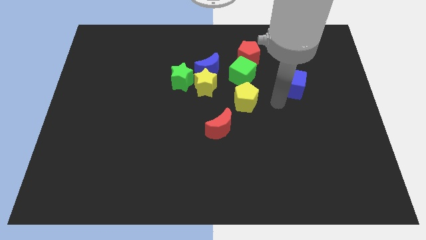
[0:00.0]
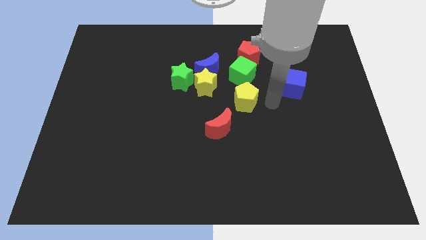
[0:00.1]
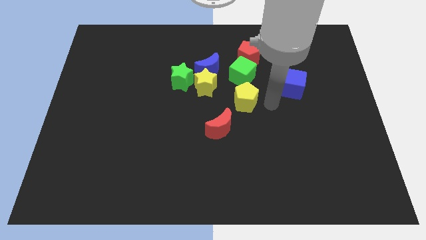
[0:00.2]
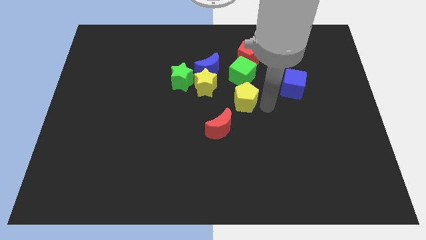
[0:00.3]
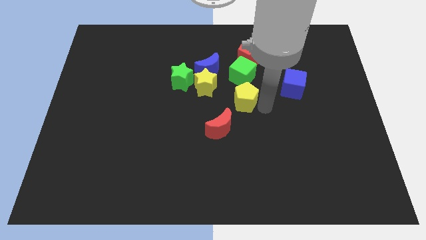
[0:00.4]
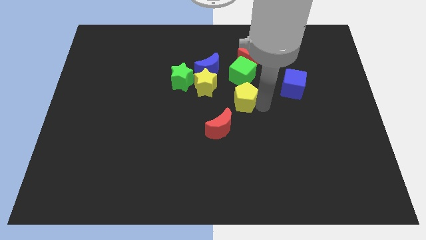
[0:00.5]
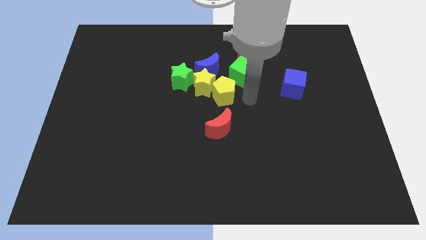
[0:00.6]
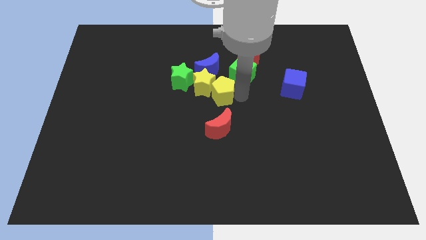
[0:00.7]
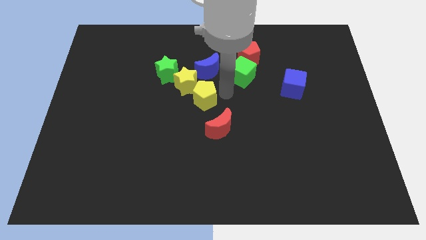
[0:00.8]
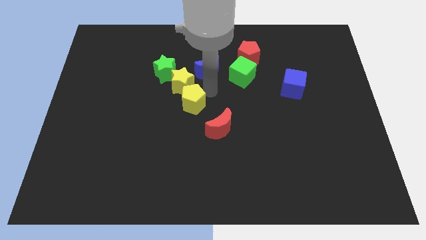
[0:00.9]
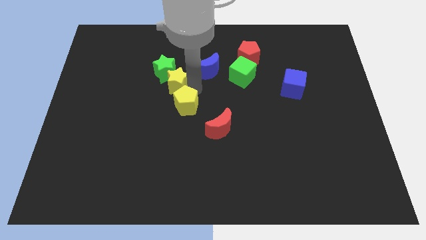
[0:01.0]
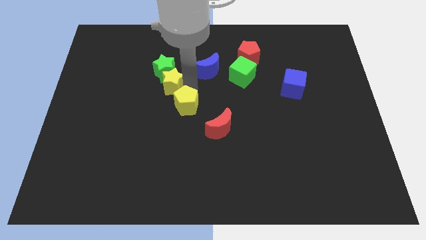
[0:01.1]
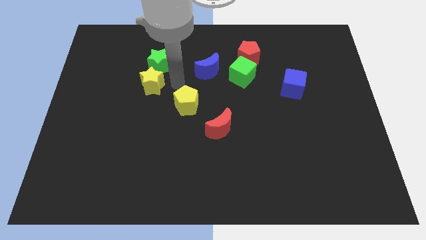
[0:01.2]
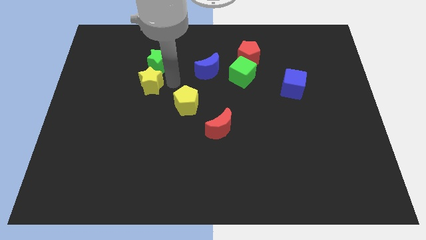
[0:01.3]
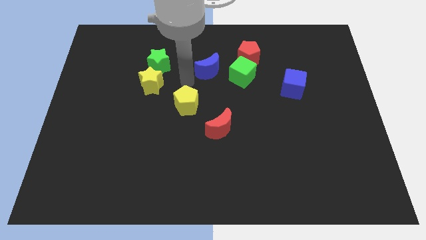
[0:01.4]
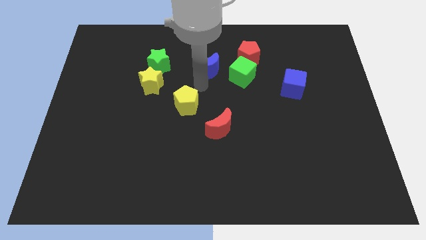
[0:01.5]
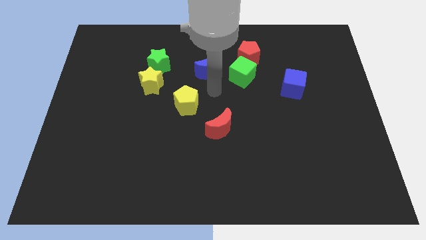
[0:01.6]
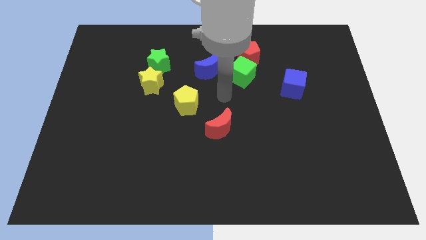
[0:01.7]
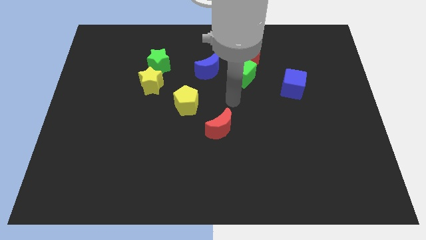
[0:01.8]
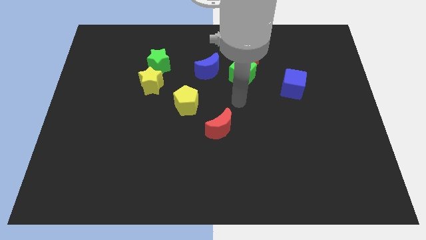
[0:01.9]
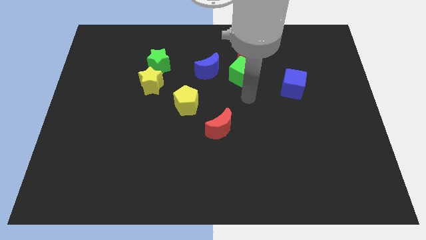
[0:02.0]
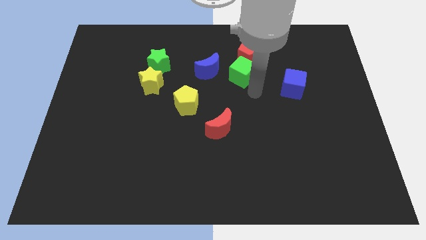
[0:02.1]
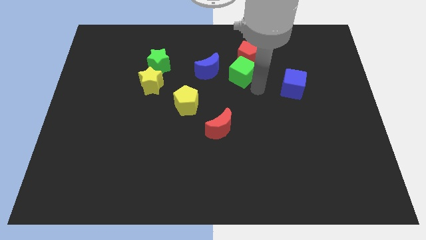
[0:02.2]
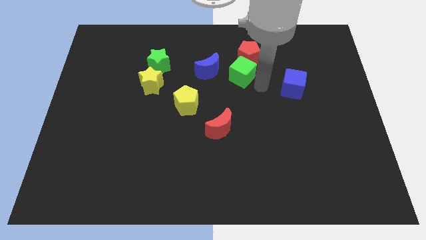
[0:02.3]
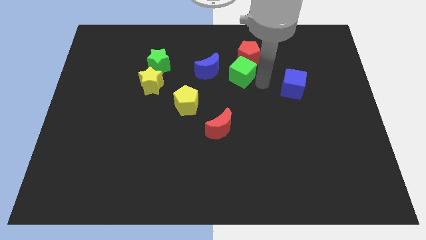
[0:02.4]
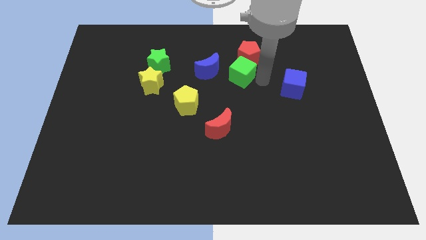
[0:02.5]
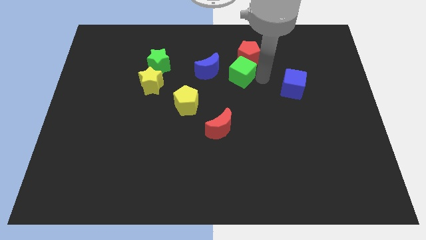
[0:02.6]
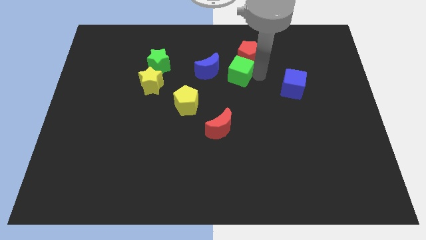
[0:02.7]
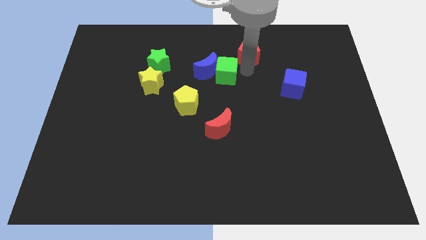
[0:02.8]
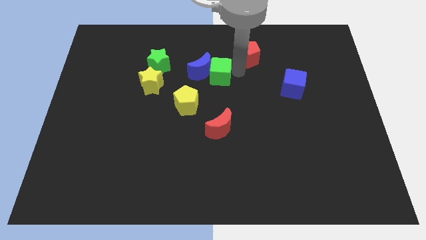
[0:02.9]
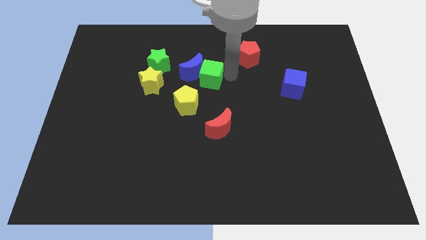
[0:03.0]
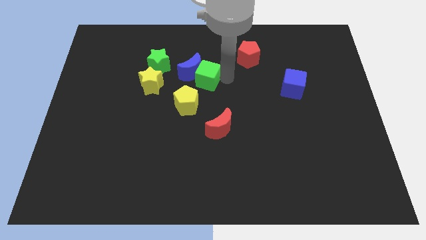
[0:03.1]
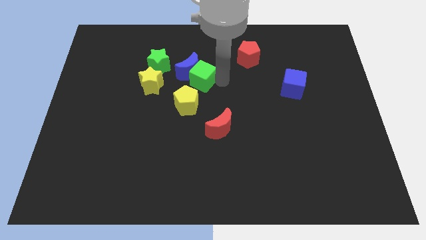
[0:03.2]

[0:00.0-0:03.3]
separate the group of blocks

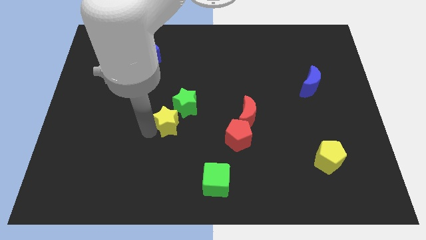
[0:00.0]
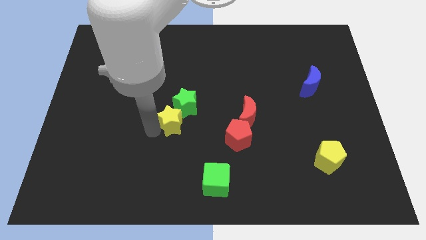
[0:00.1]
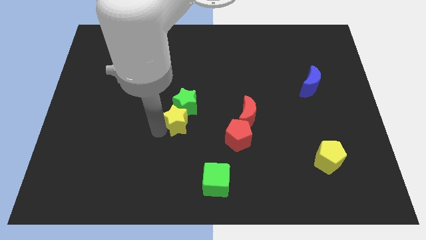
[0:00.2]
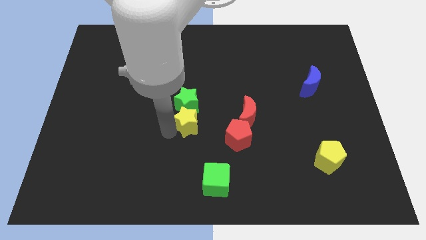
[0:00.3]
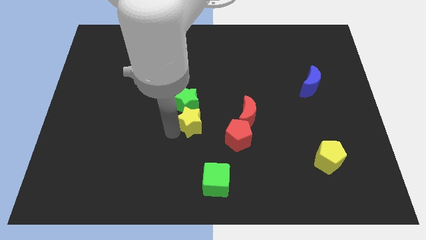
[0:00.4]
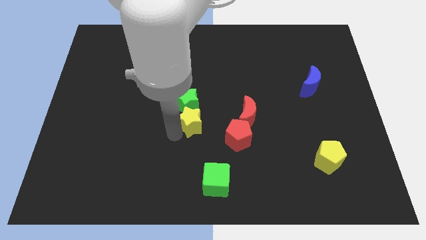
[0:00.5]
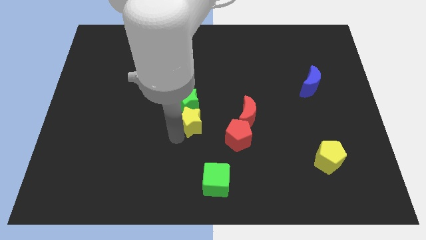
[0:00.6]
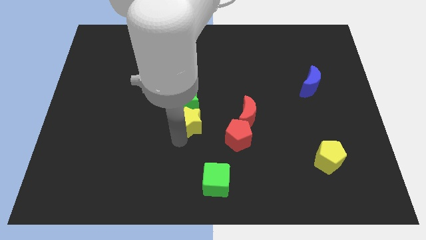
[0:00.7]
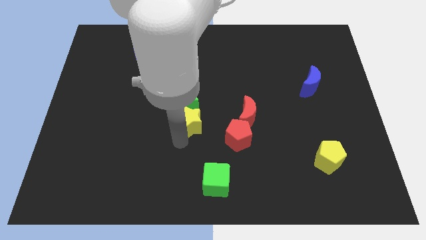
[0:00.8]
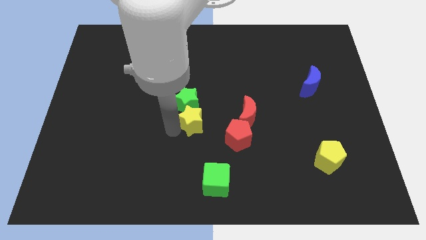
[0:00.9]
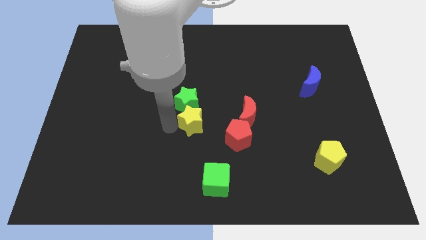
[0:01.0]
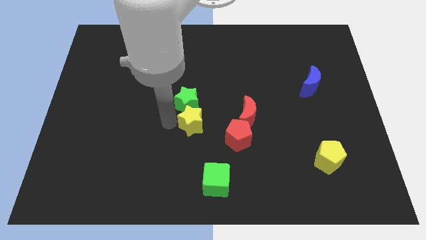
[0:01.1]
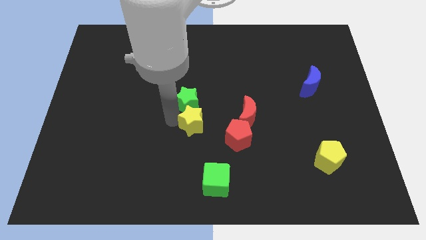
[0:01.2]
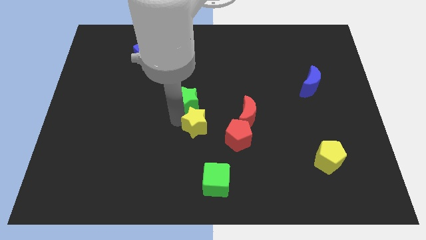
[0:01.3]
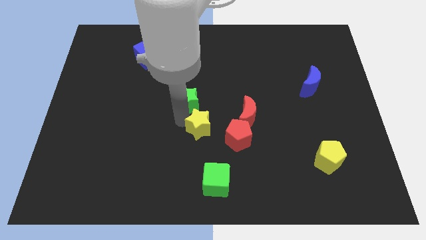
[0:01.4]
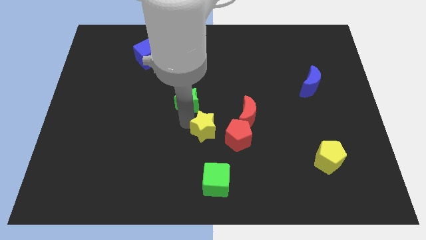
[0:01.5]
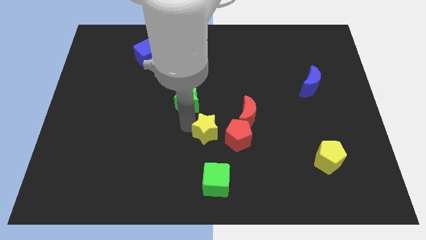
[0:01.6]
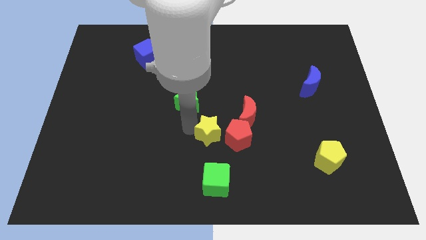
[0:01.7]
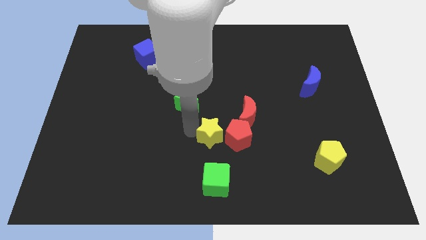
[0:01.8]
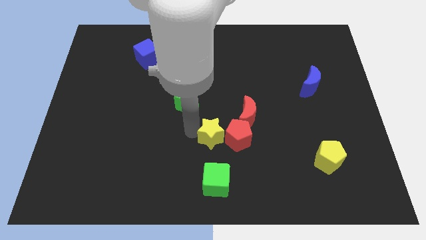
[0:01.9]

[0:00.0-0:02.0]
move the yellow star to the left of red pentagon

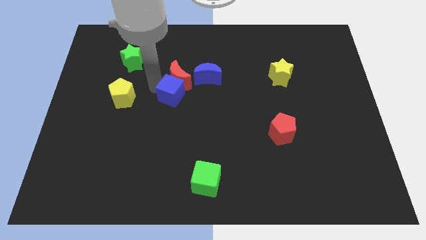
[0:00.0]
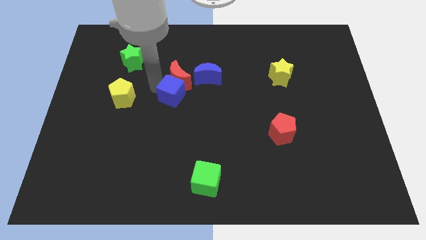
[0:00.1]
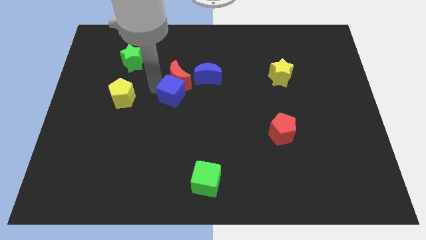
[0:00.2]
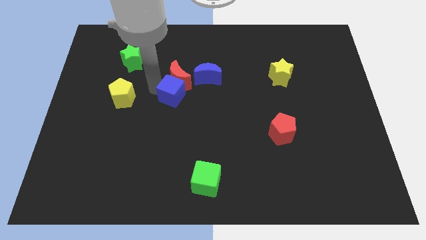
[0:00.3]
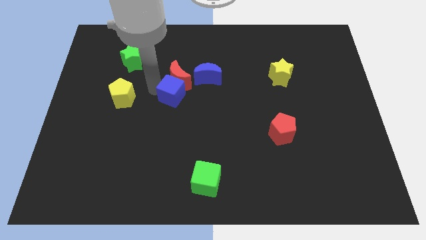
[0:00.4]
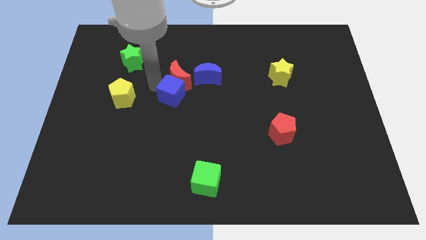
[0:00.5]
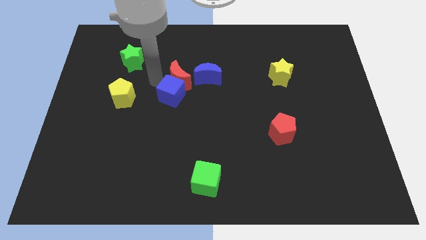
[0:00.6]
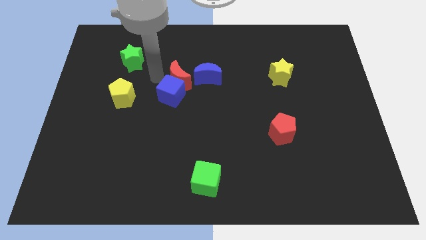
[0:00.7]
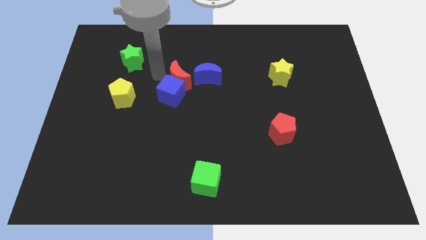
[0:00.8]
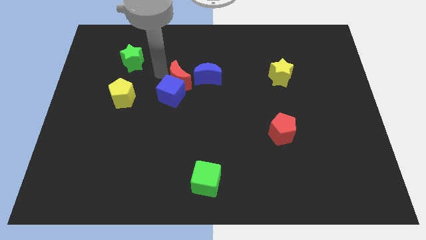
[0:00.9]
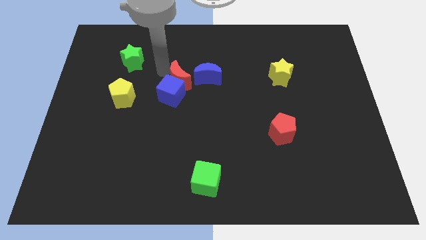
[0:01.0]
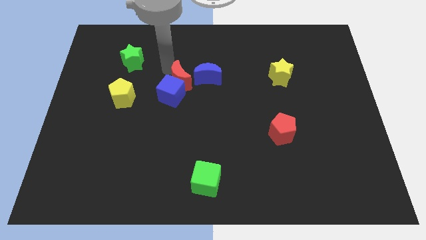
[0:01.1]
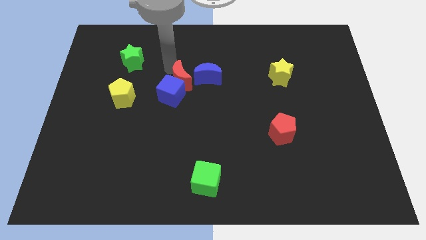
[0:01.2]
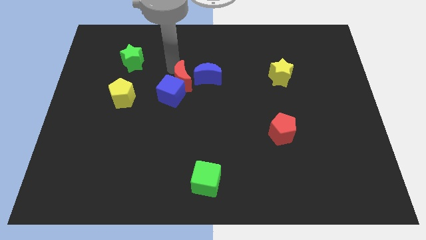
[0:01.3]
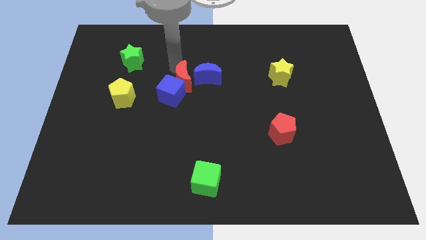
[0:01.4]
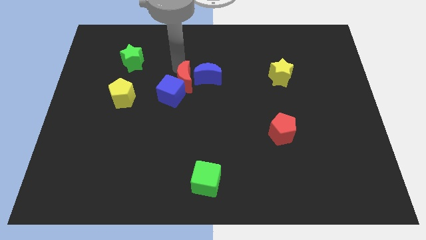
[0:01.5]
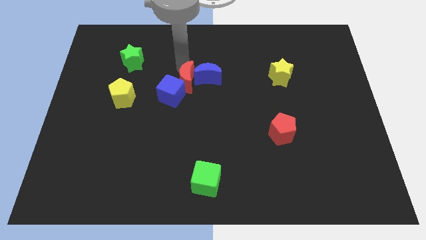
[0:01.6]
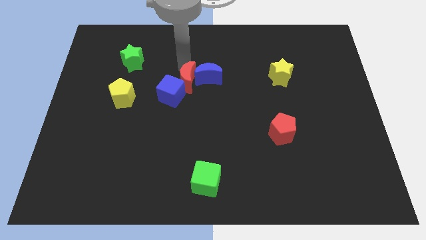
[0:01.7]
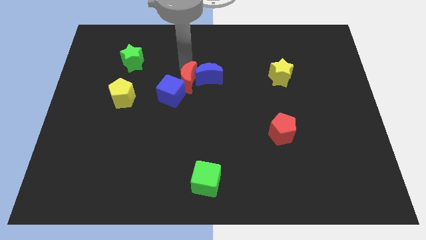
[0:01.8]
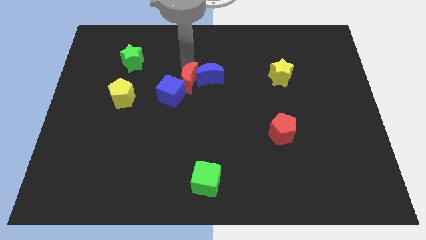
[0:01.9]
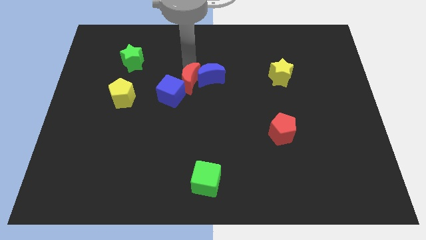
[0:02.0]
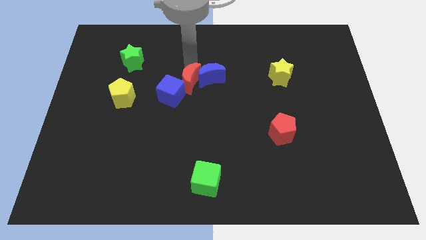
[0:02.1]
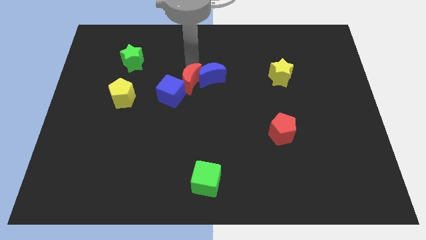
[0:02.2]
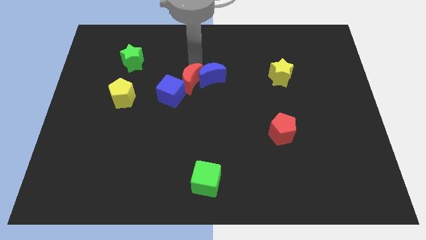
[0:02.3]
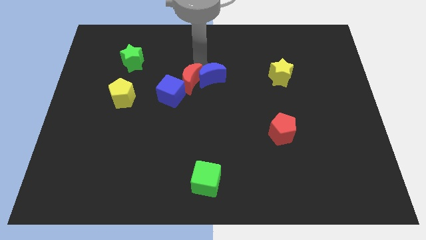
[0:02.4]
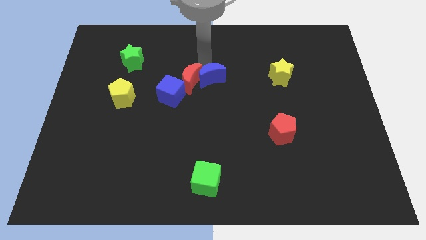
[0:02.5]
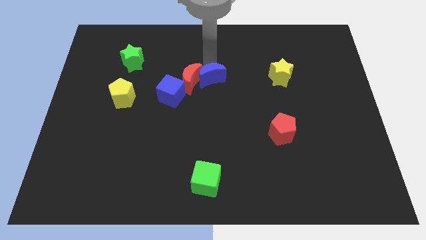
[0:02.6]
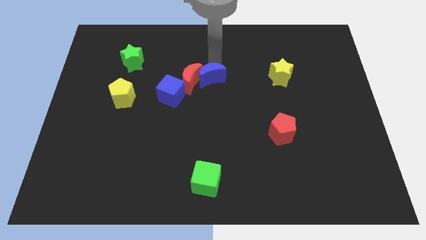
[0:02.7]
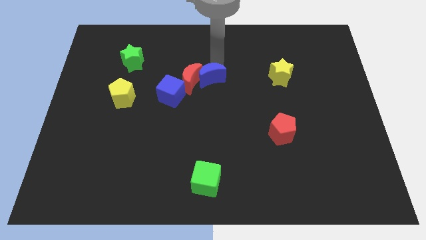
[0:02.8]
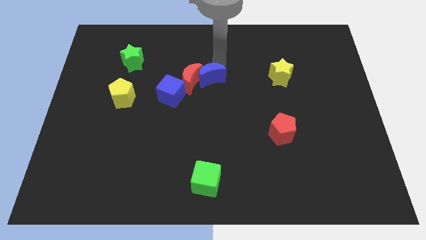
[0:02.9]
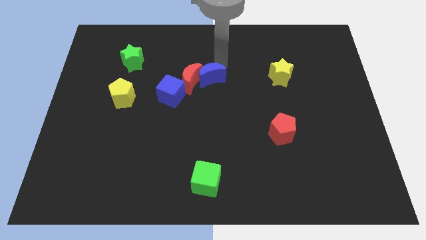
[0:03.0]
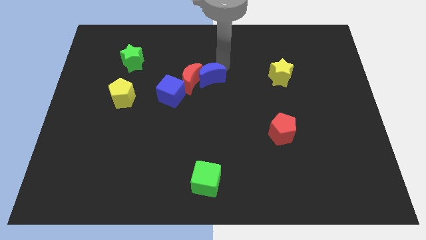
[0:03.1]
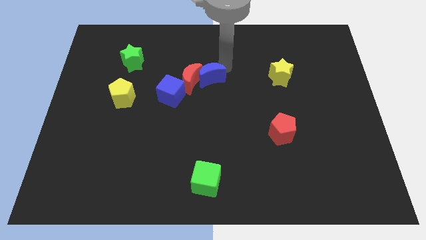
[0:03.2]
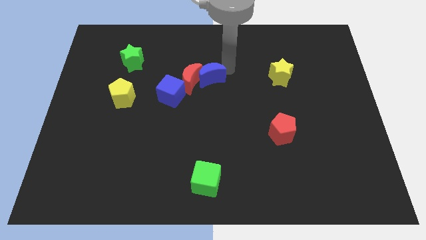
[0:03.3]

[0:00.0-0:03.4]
push the red crescent into the blue crescent

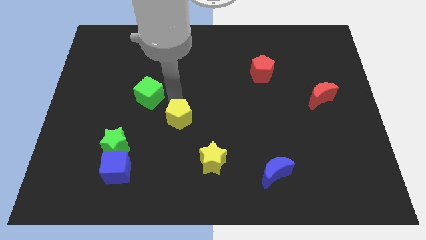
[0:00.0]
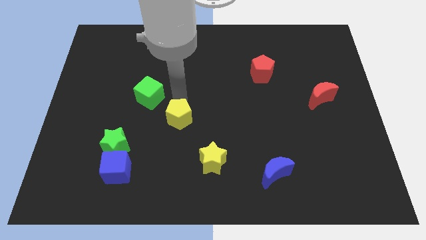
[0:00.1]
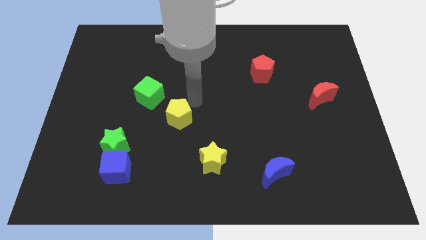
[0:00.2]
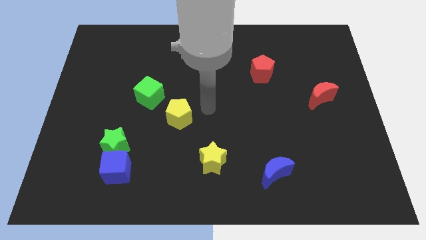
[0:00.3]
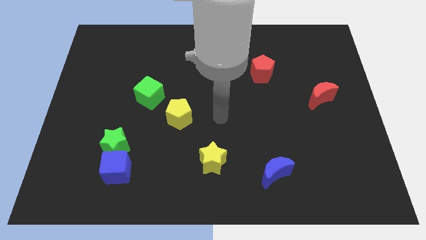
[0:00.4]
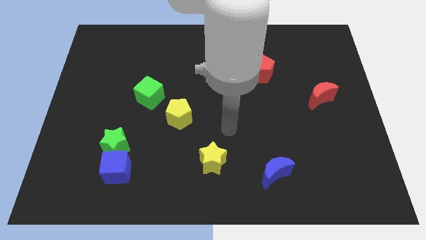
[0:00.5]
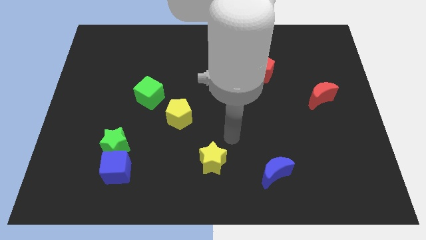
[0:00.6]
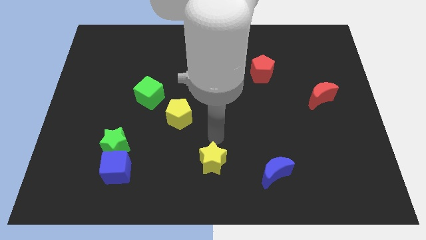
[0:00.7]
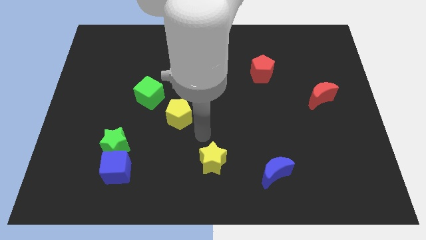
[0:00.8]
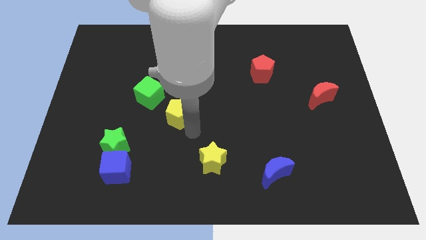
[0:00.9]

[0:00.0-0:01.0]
move your arm to the bottom of yellow pentagon
